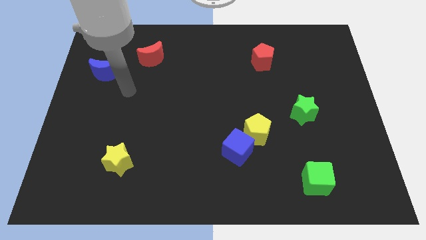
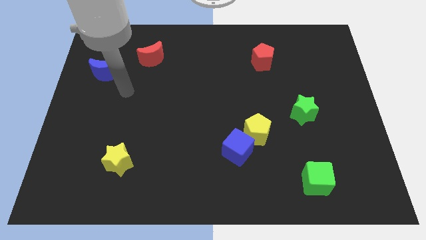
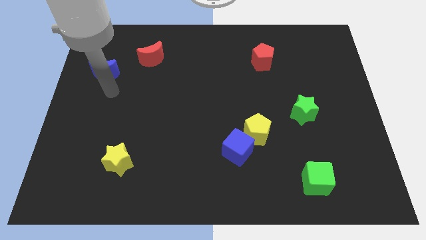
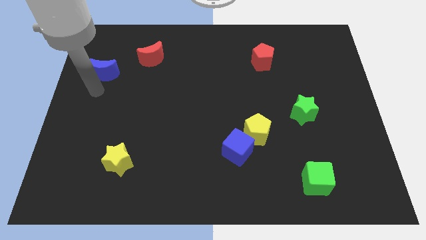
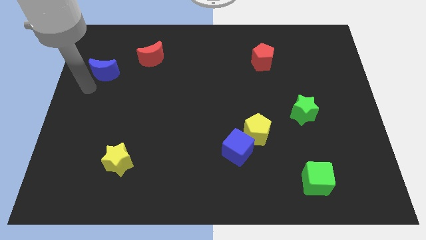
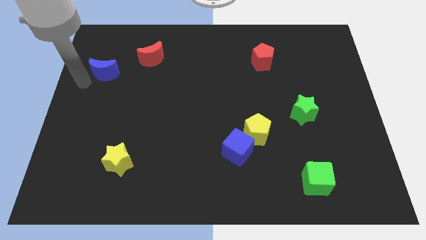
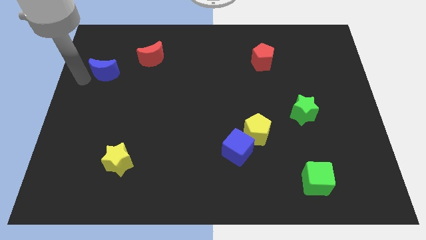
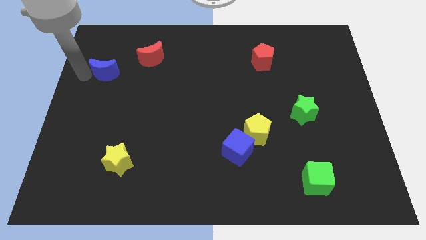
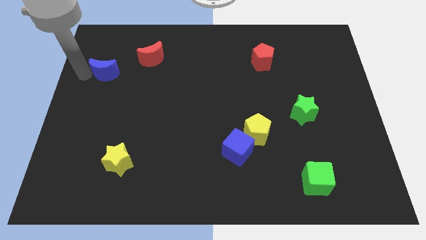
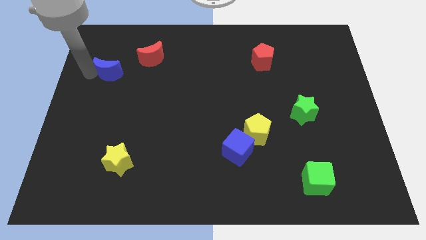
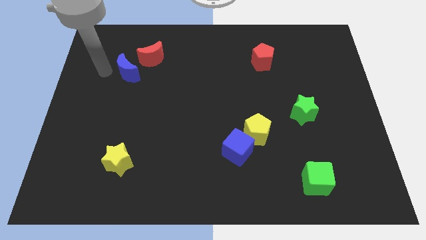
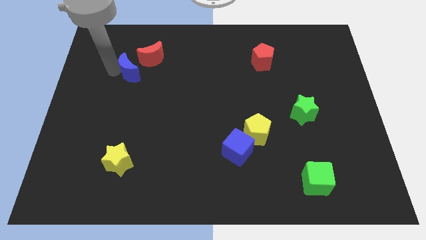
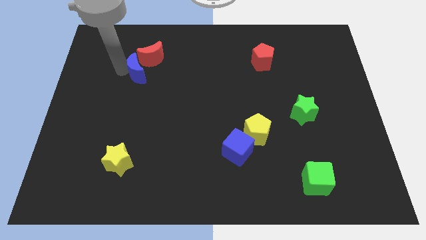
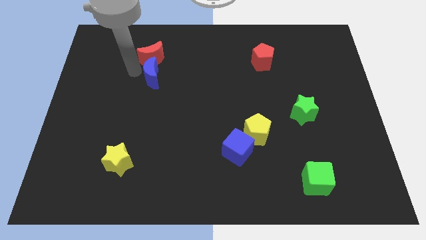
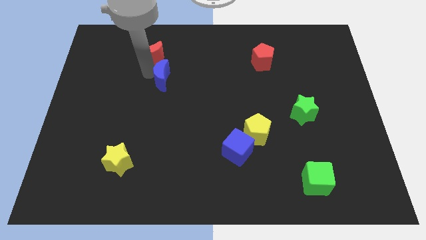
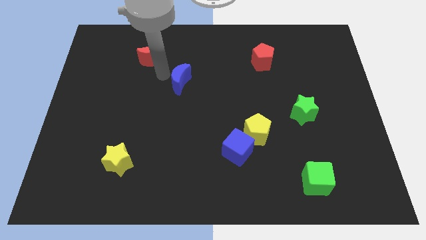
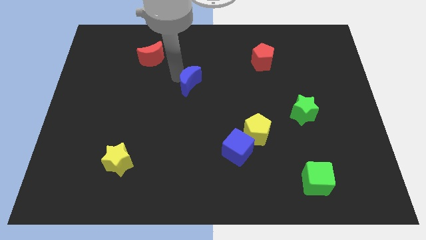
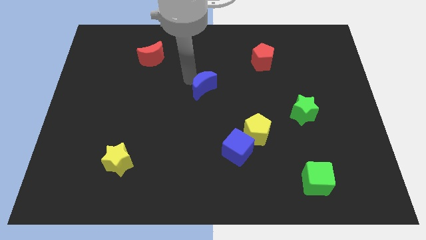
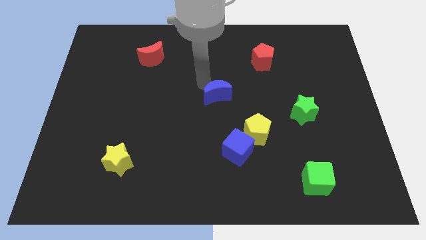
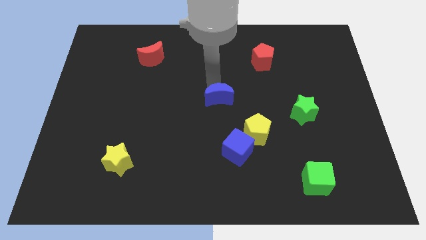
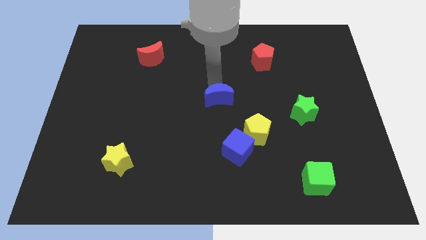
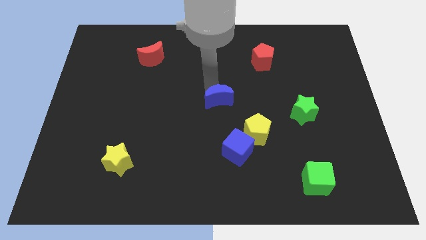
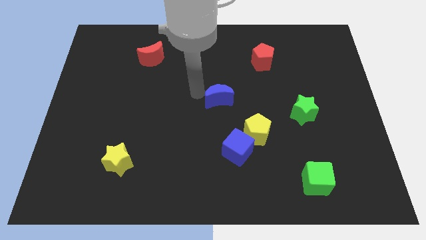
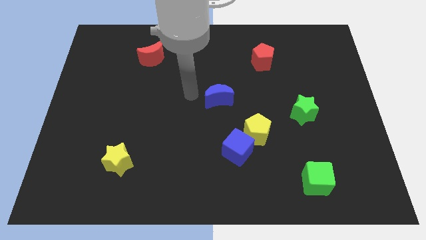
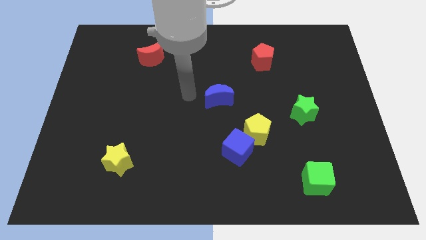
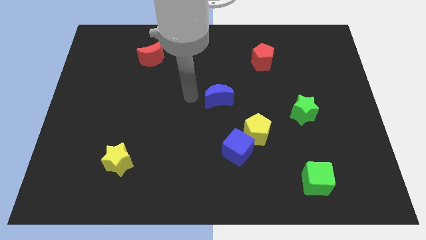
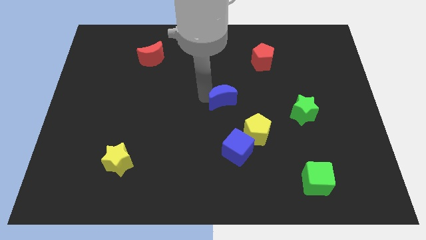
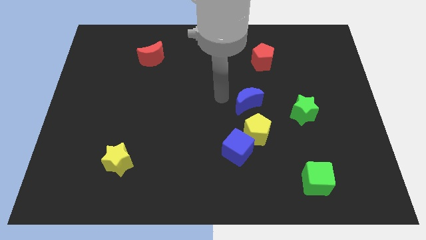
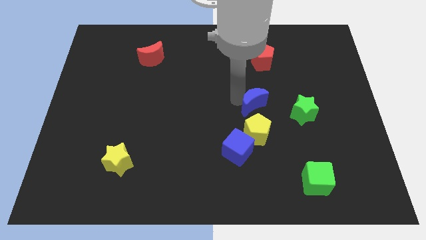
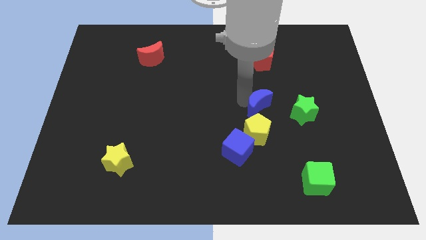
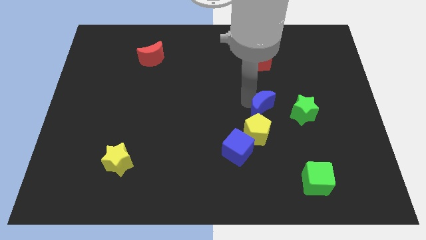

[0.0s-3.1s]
push blue crescent above yellow pentagon

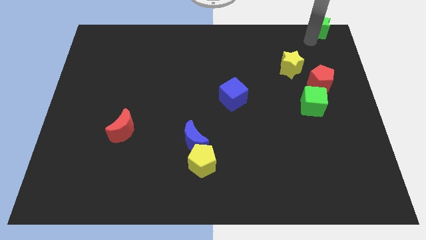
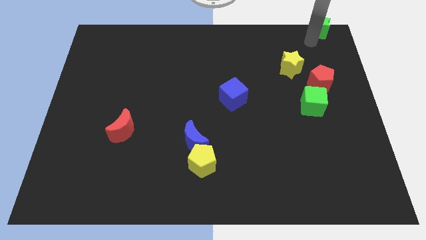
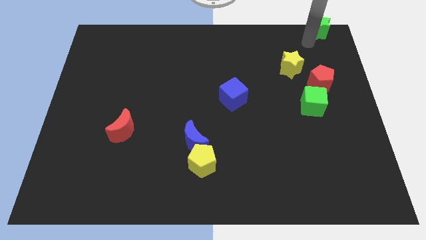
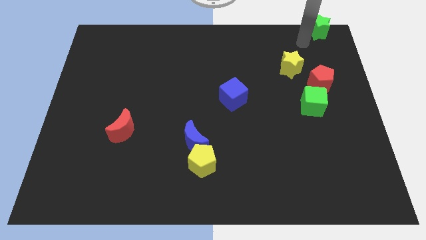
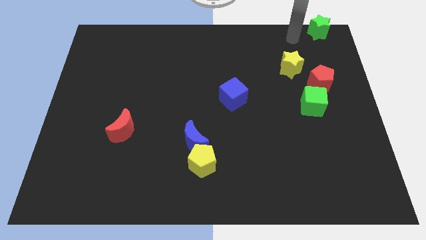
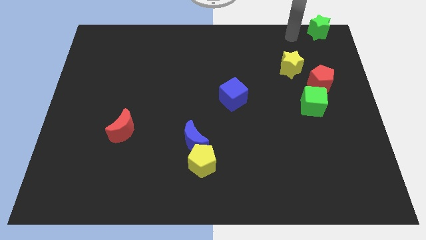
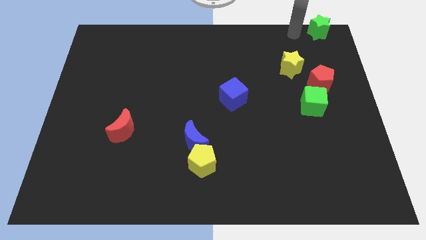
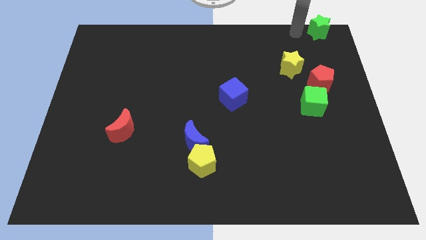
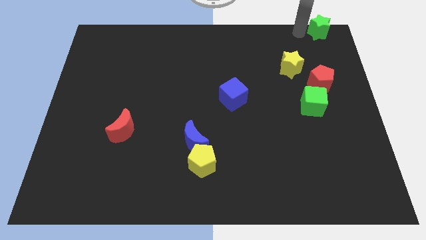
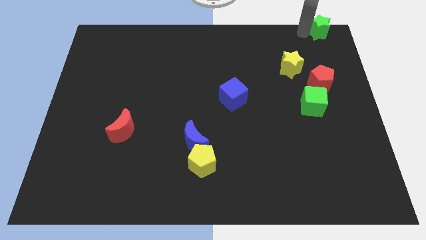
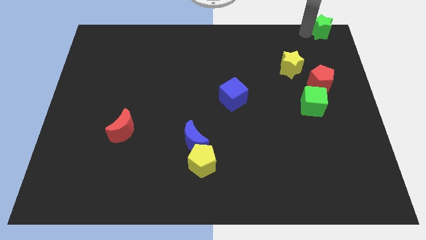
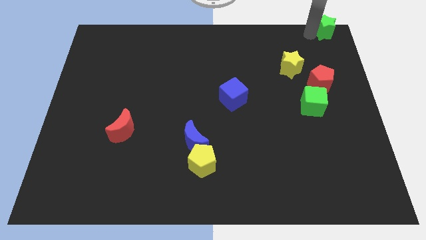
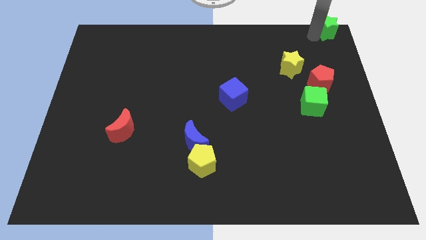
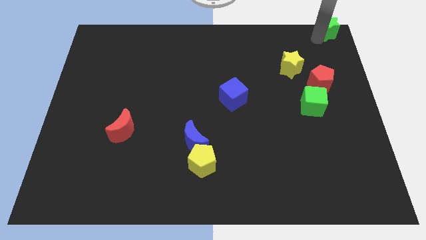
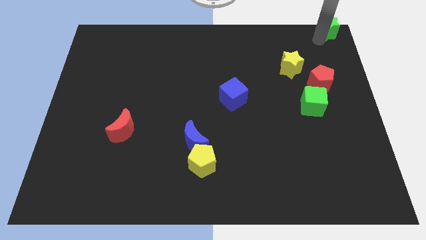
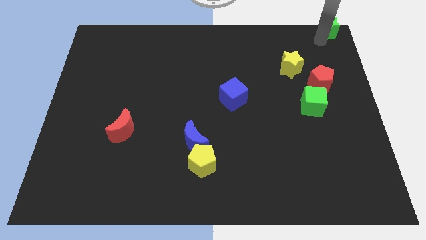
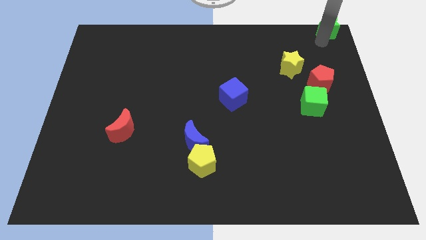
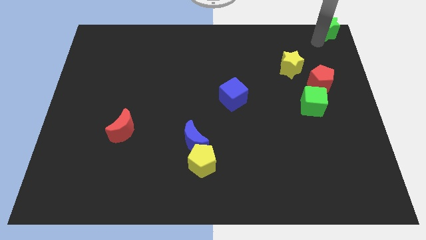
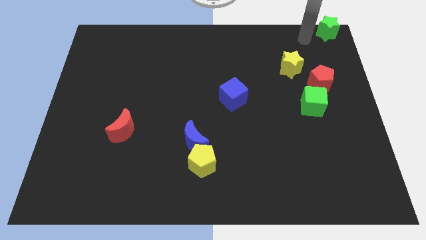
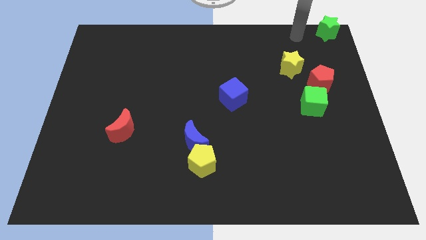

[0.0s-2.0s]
move the green star to the top right side corner

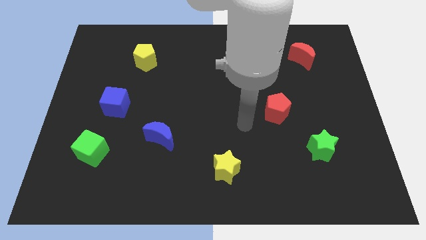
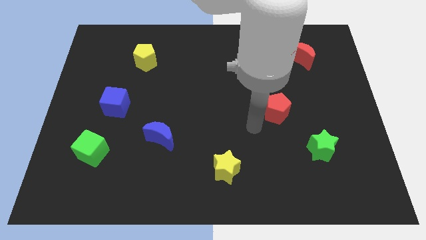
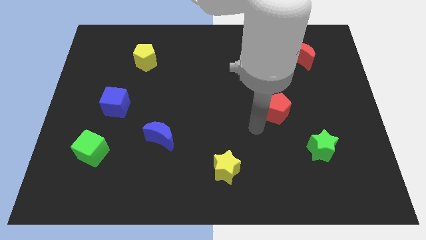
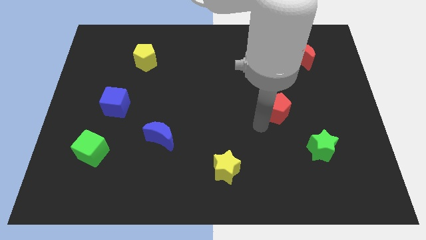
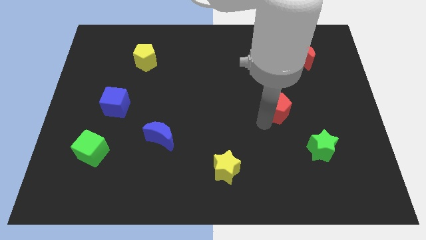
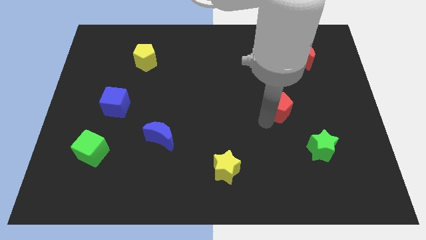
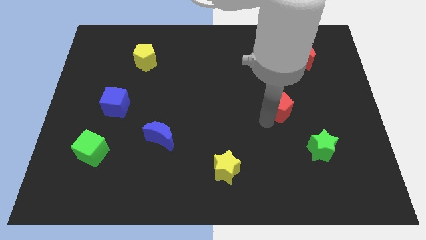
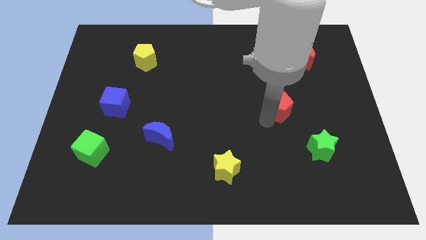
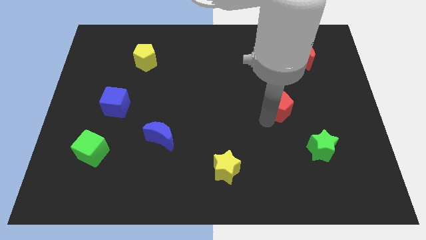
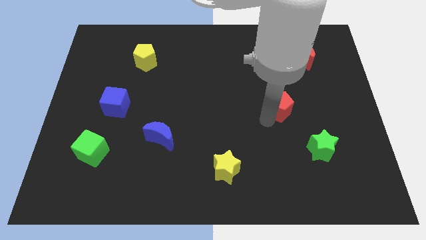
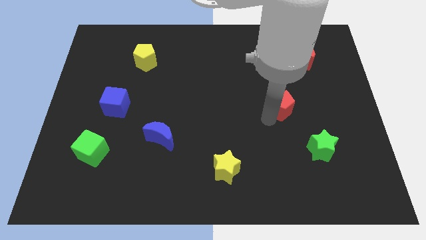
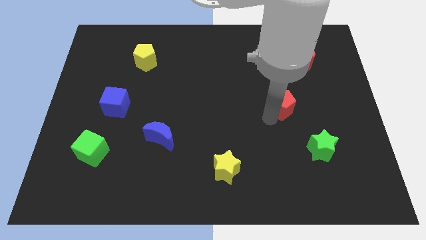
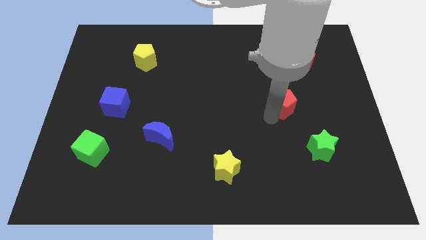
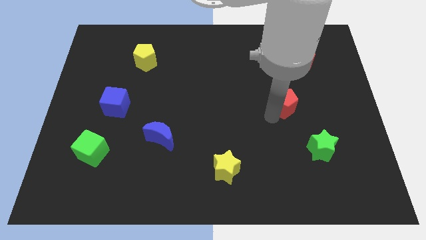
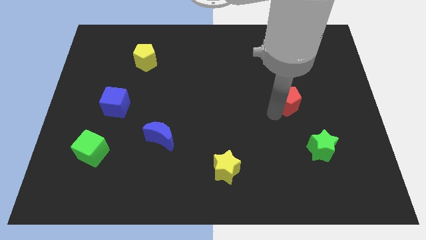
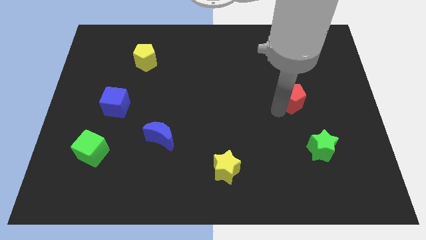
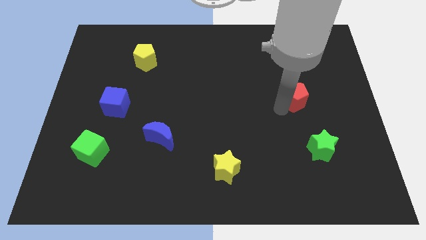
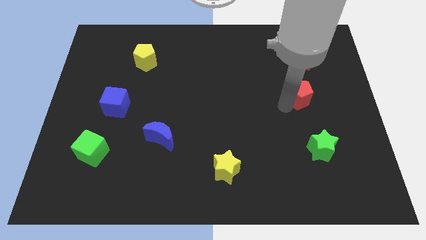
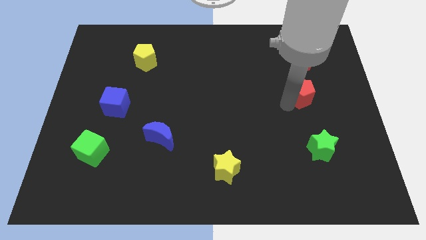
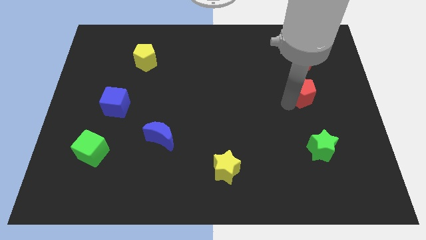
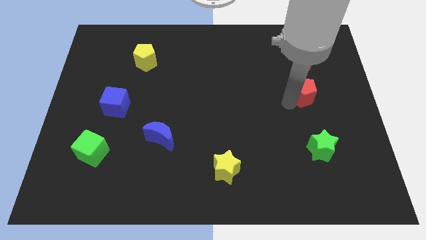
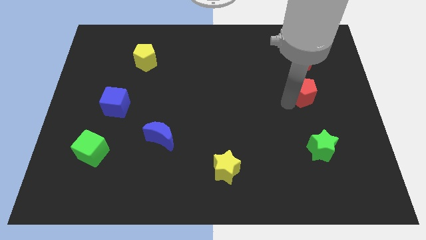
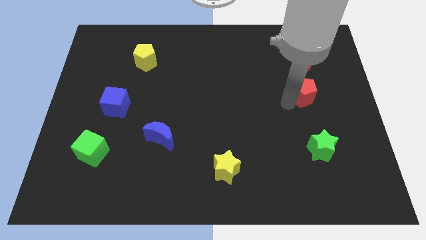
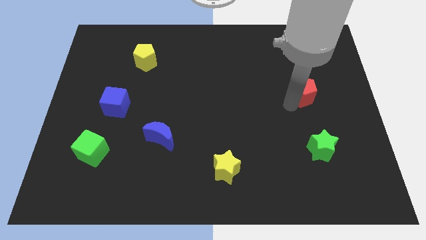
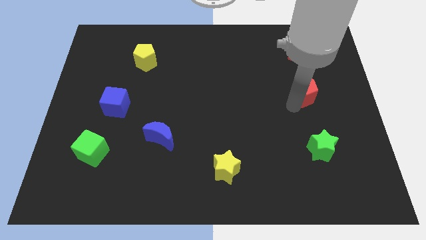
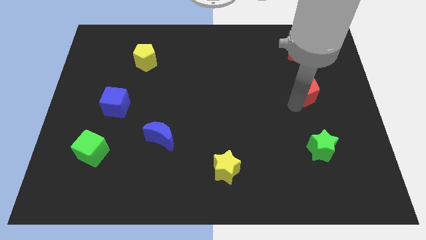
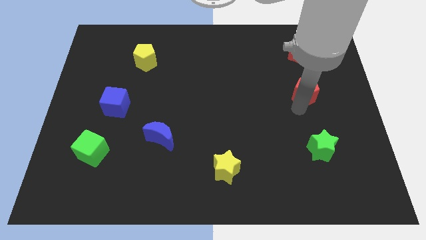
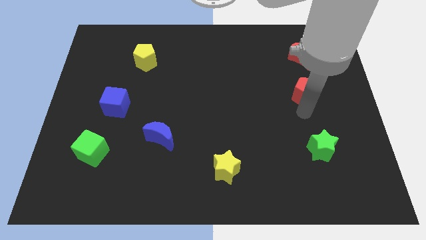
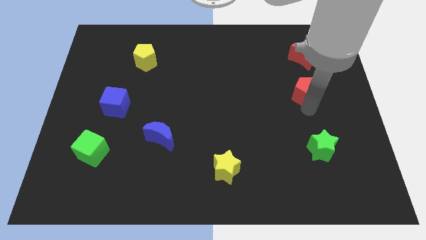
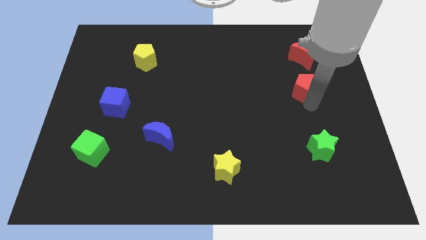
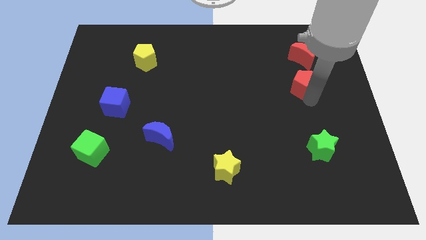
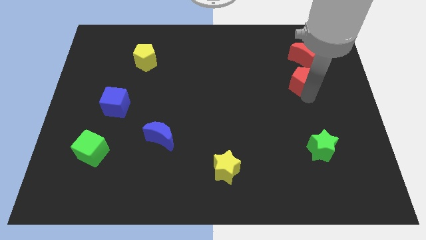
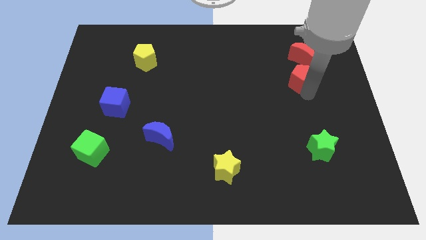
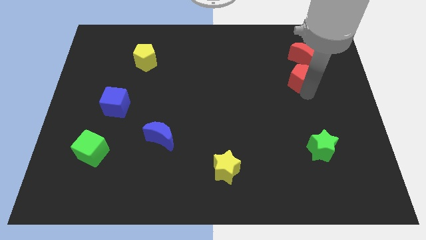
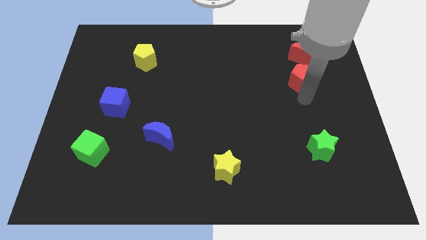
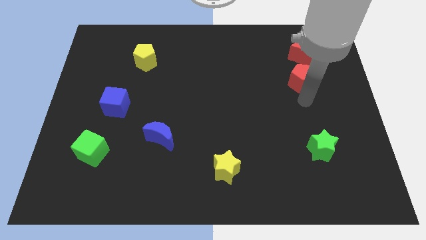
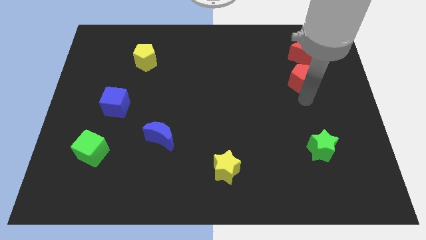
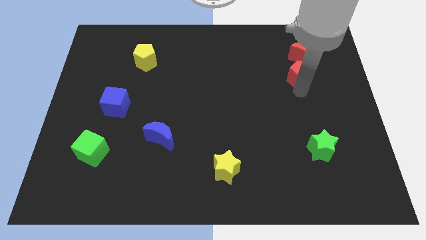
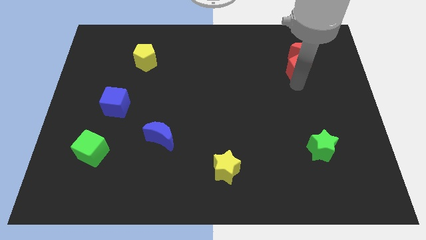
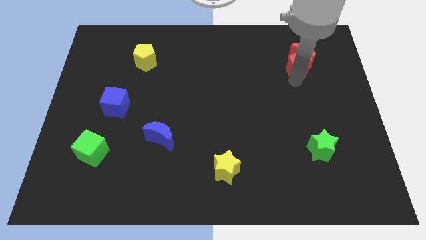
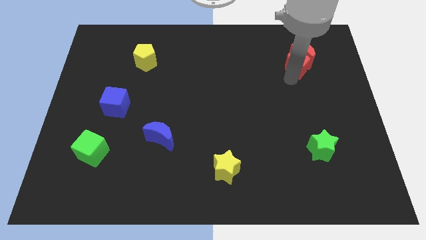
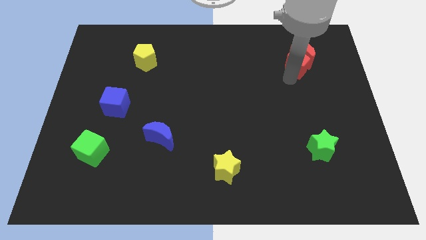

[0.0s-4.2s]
slide red pentagon into red moon
